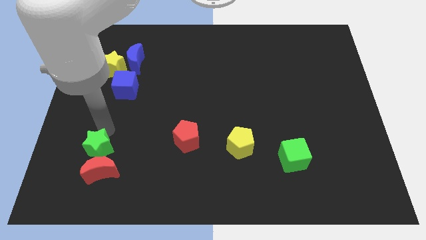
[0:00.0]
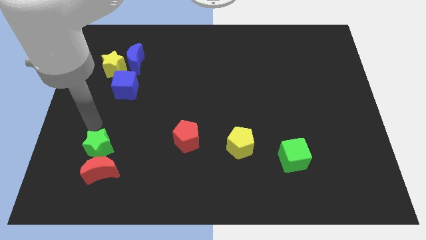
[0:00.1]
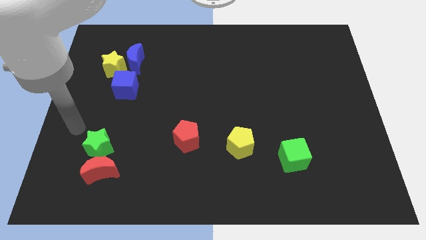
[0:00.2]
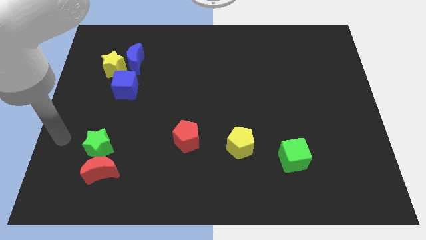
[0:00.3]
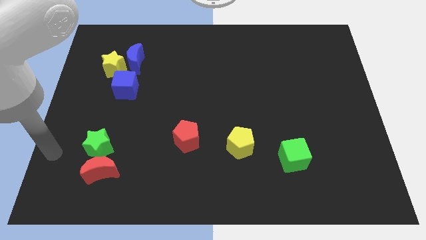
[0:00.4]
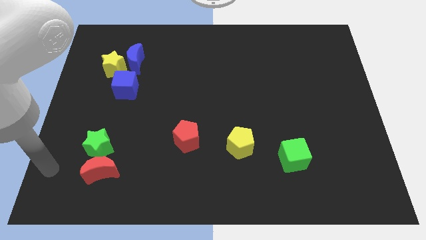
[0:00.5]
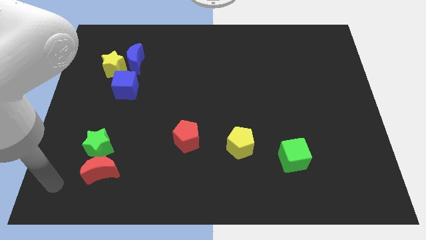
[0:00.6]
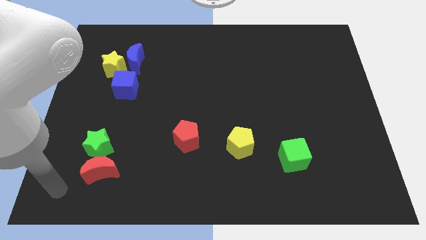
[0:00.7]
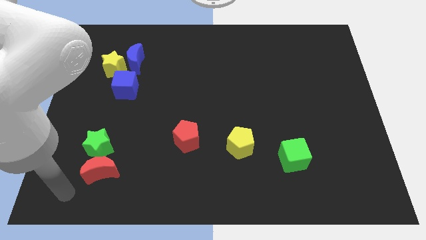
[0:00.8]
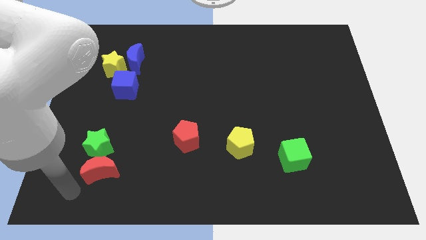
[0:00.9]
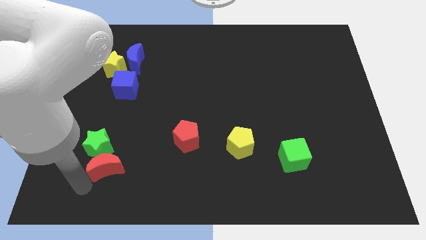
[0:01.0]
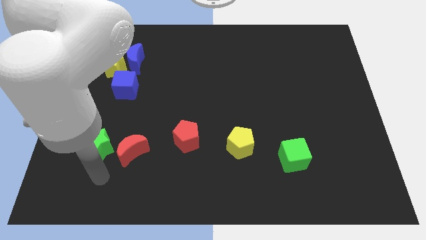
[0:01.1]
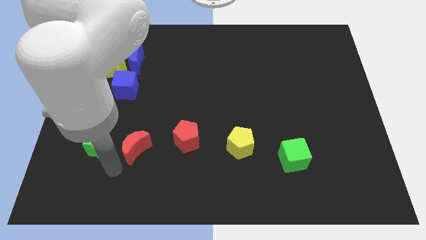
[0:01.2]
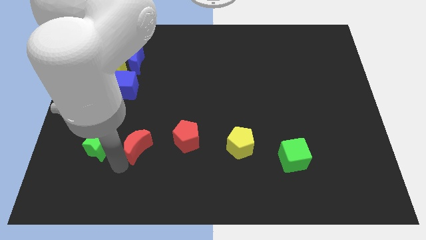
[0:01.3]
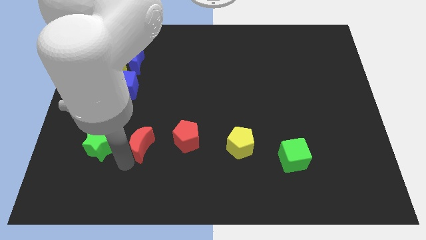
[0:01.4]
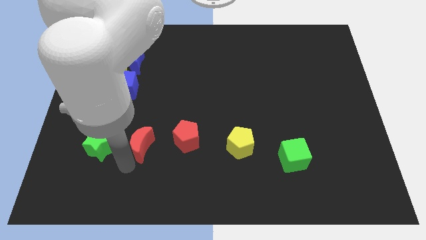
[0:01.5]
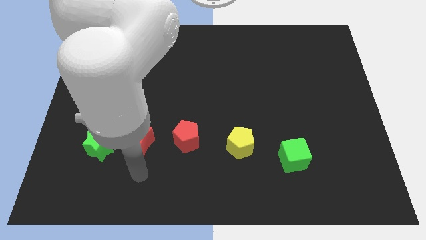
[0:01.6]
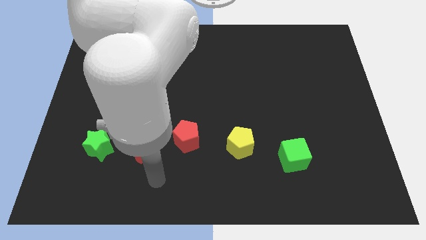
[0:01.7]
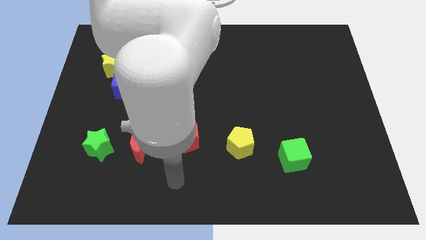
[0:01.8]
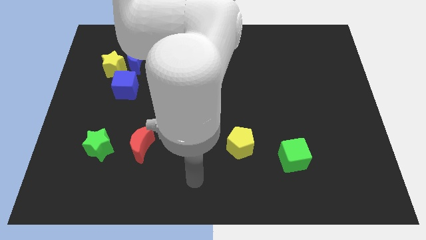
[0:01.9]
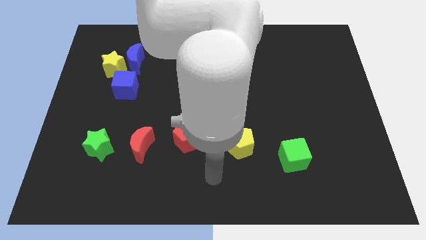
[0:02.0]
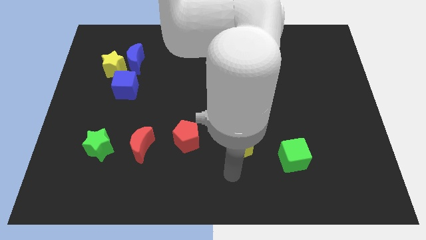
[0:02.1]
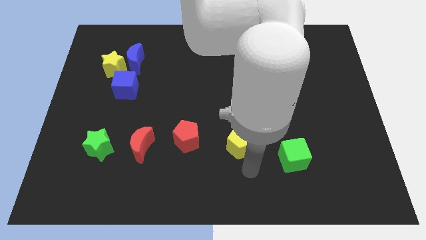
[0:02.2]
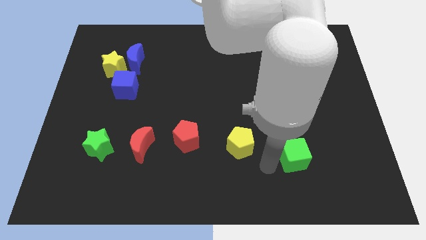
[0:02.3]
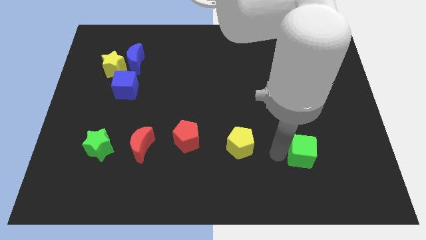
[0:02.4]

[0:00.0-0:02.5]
place the red moon in between the red pentagon and the green star

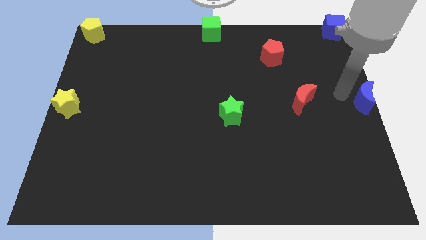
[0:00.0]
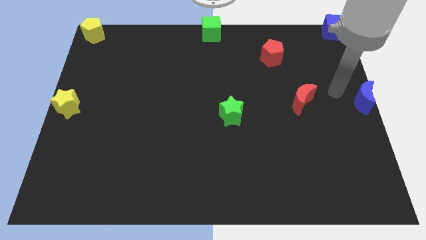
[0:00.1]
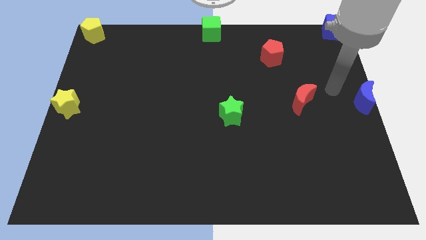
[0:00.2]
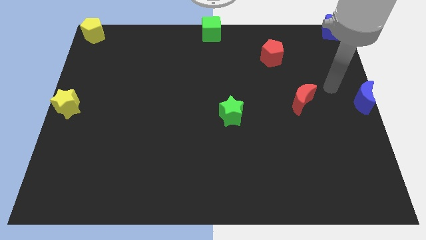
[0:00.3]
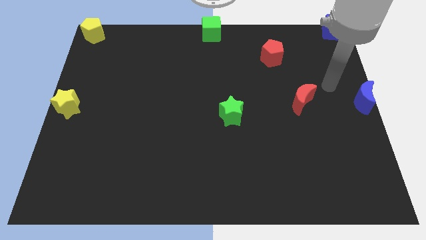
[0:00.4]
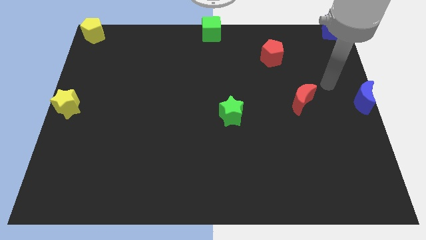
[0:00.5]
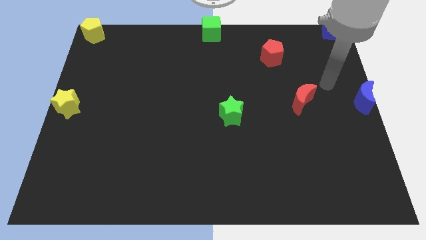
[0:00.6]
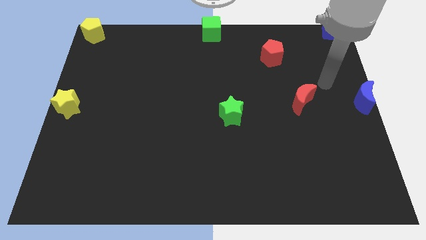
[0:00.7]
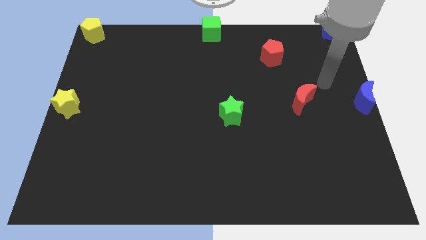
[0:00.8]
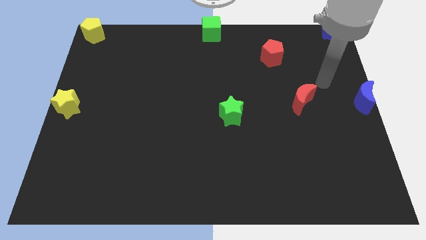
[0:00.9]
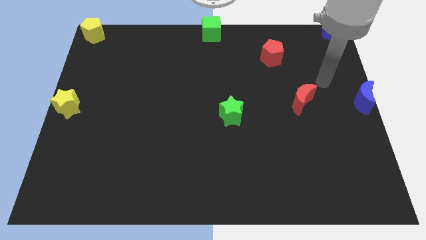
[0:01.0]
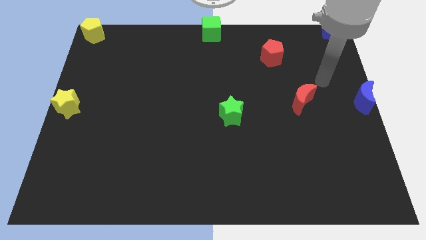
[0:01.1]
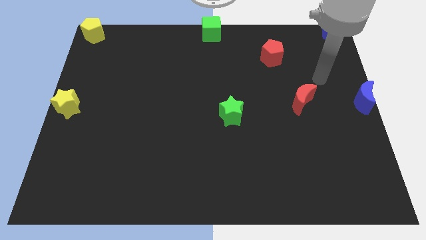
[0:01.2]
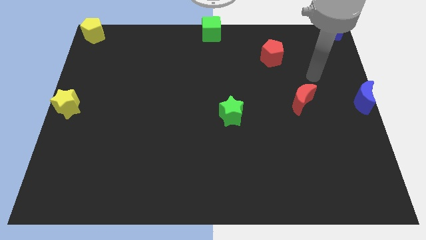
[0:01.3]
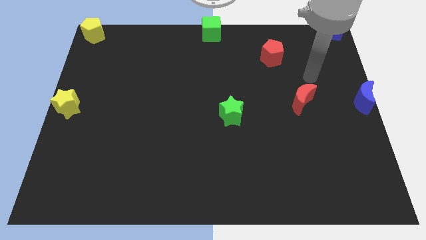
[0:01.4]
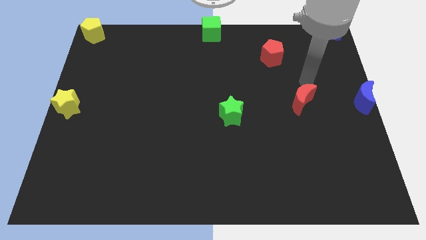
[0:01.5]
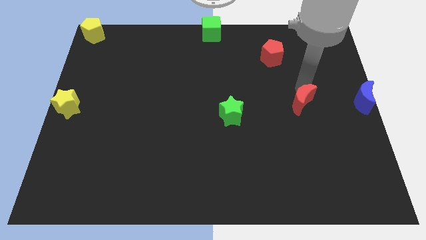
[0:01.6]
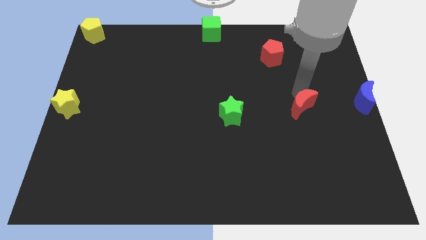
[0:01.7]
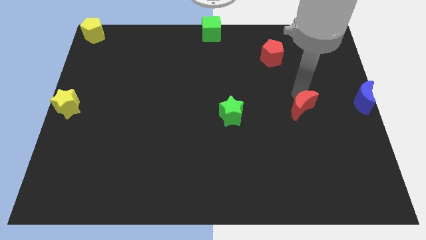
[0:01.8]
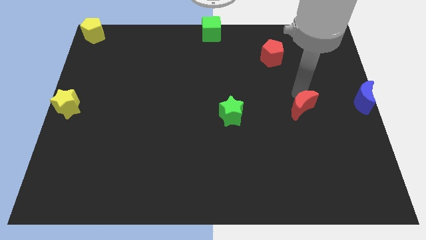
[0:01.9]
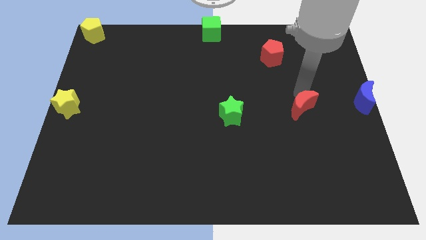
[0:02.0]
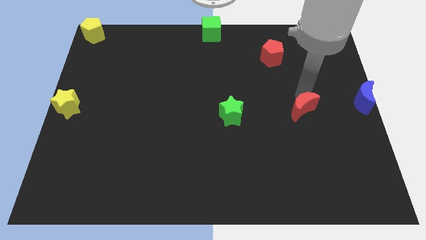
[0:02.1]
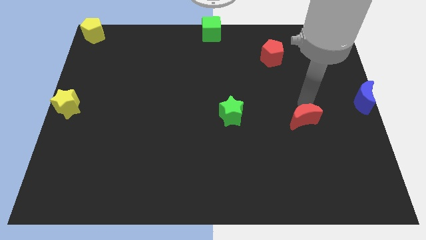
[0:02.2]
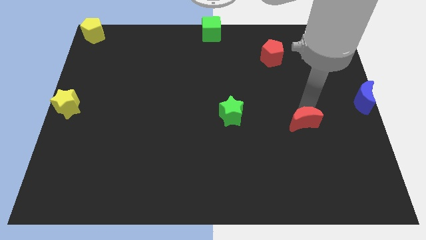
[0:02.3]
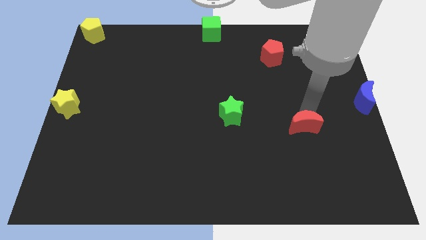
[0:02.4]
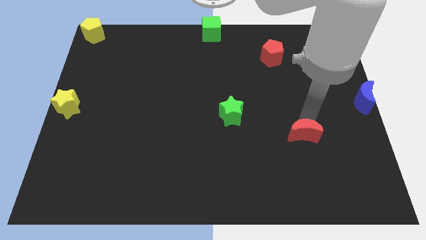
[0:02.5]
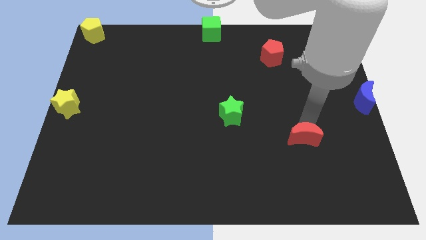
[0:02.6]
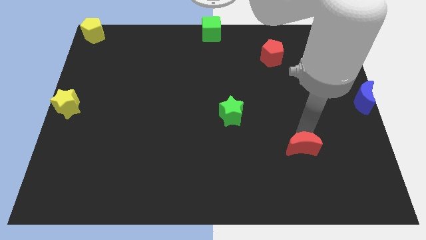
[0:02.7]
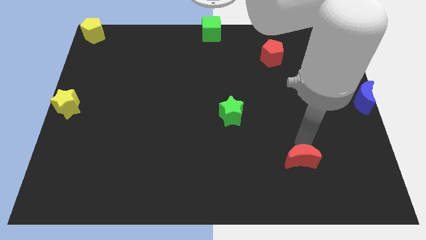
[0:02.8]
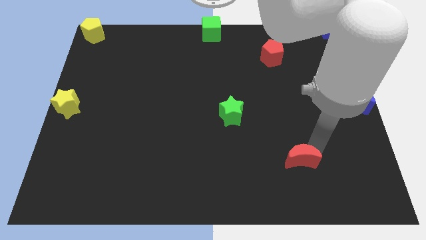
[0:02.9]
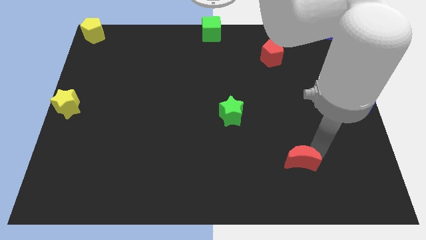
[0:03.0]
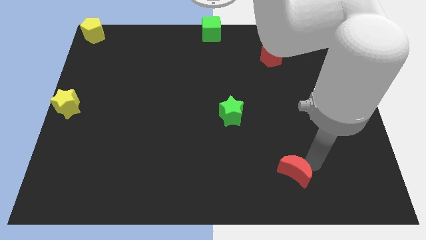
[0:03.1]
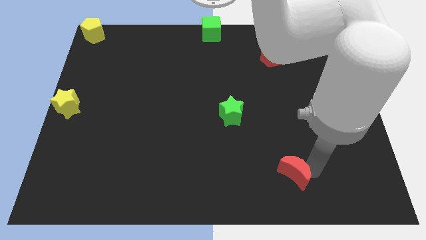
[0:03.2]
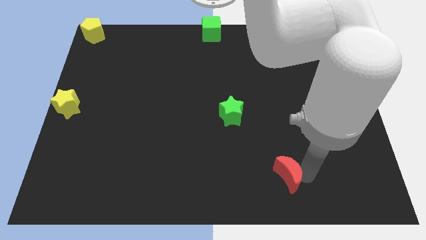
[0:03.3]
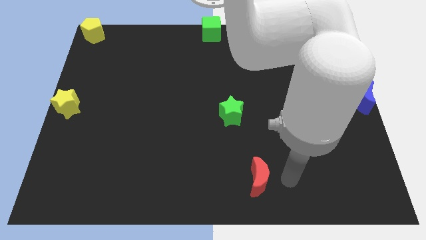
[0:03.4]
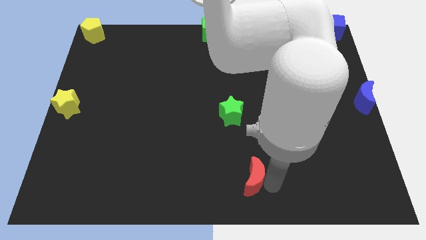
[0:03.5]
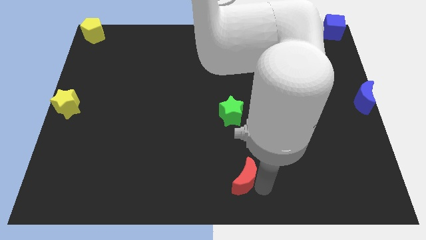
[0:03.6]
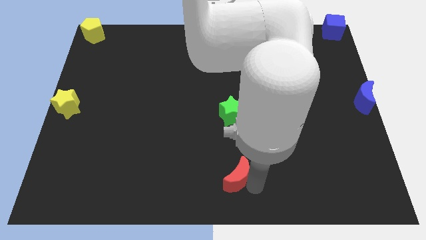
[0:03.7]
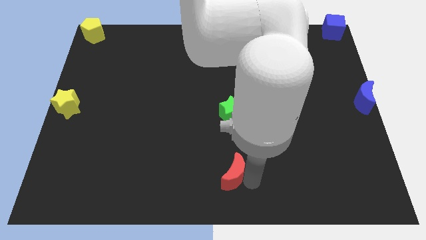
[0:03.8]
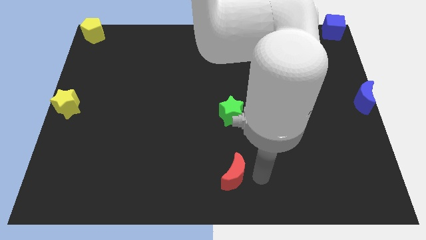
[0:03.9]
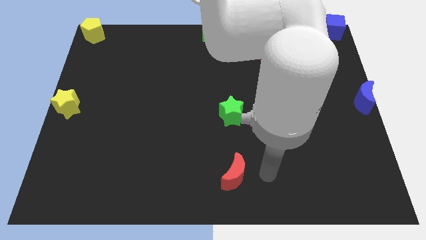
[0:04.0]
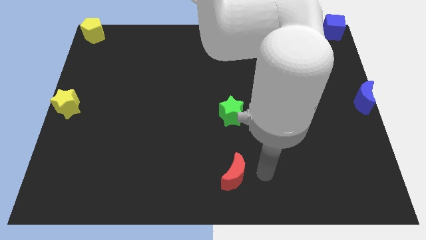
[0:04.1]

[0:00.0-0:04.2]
place the red moon below the green star

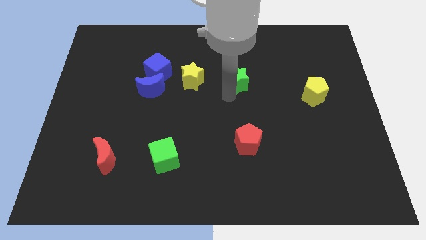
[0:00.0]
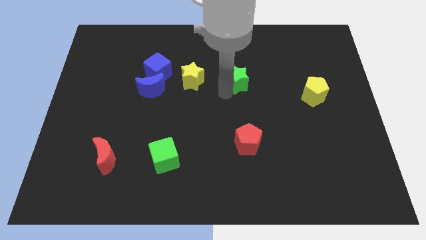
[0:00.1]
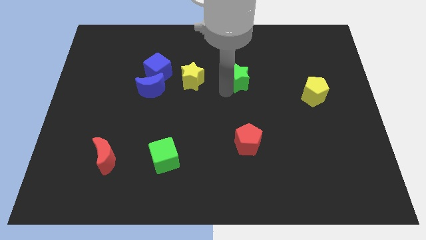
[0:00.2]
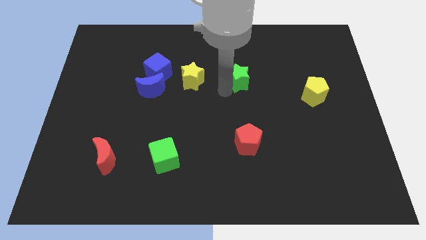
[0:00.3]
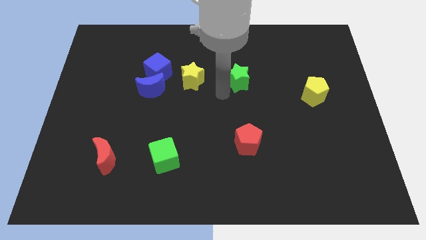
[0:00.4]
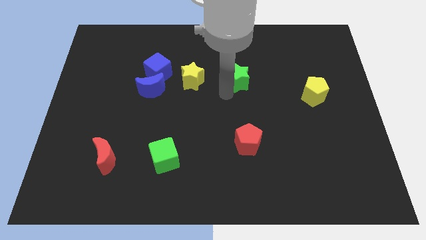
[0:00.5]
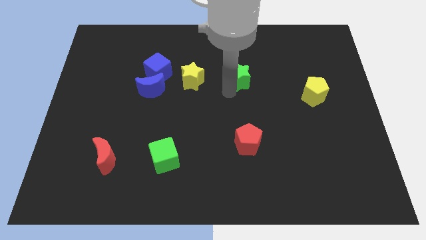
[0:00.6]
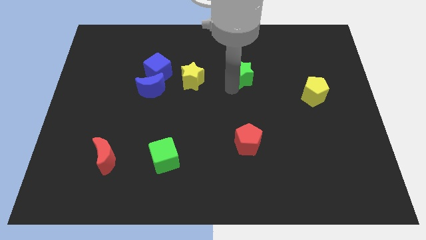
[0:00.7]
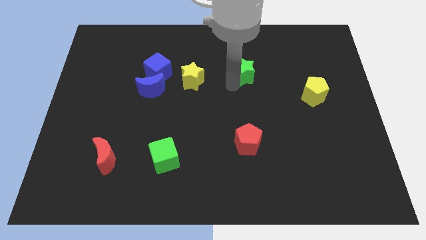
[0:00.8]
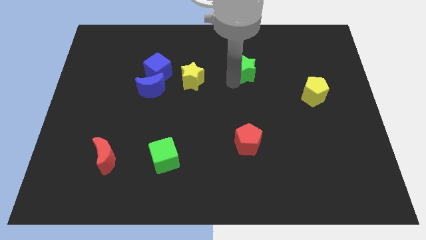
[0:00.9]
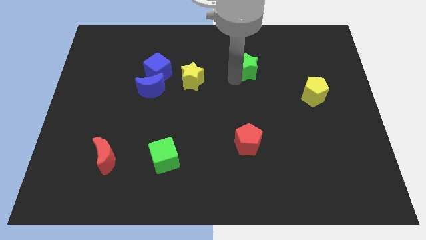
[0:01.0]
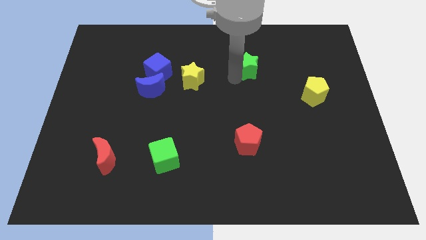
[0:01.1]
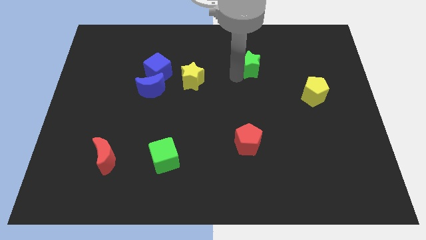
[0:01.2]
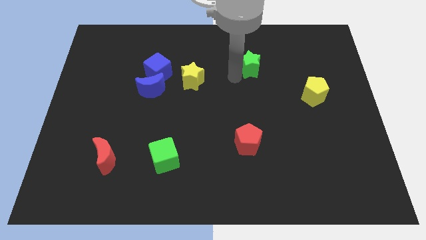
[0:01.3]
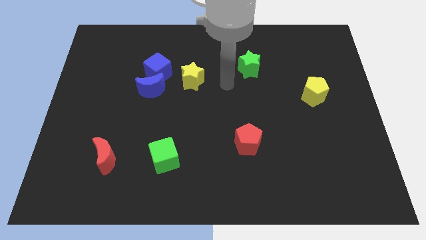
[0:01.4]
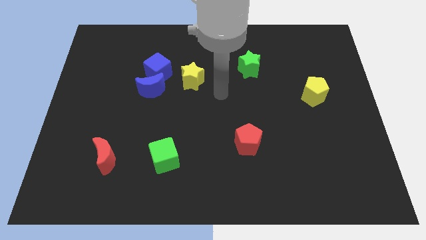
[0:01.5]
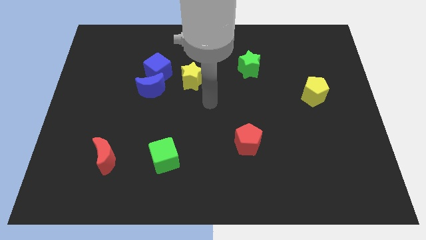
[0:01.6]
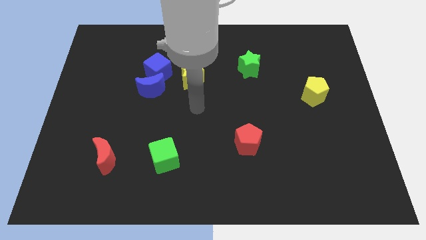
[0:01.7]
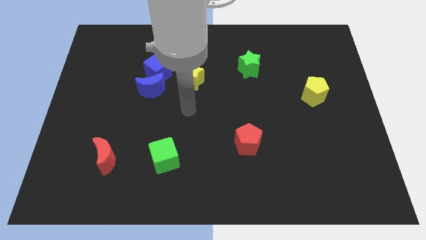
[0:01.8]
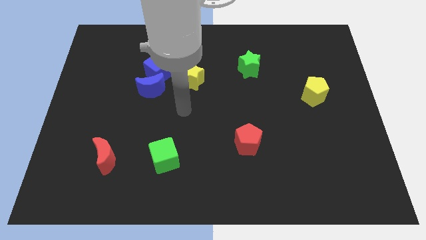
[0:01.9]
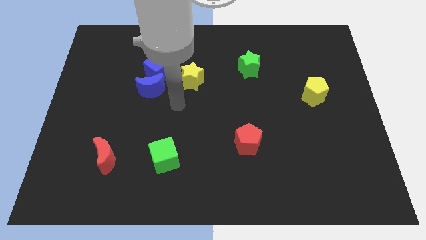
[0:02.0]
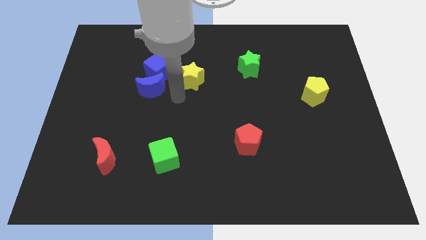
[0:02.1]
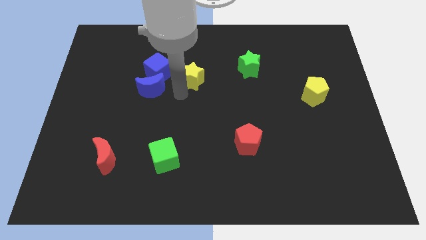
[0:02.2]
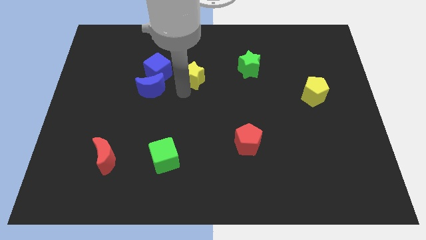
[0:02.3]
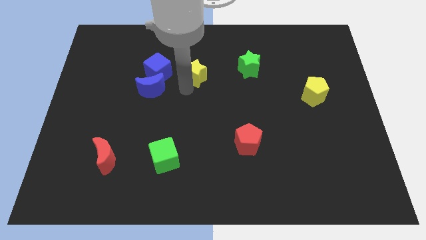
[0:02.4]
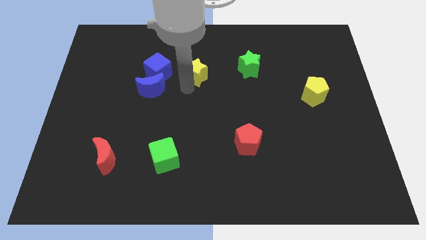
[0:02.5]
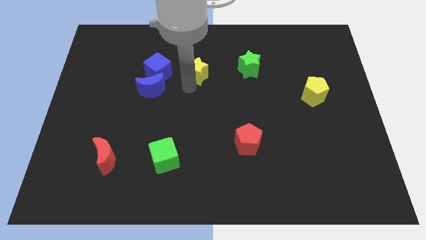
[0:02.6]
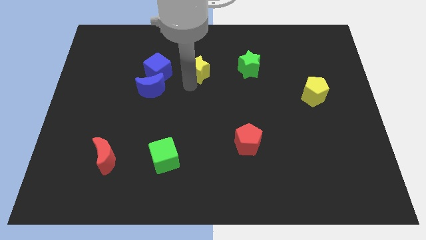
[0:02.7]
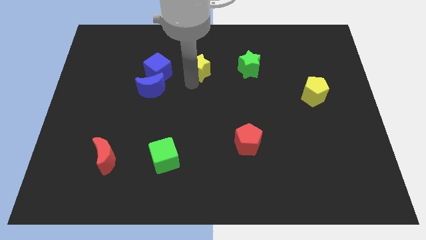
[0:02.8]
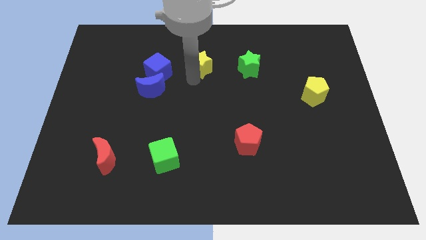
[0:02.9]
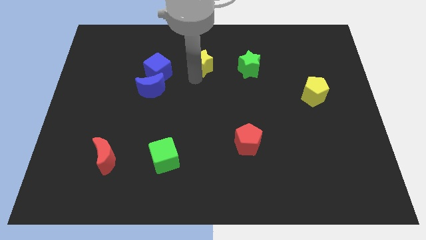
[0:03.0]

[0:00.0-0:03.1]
place the green star and yellow star to the right of the blue cube
